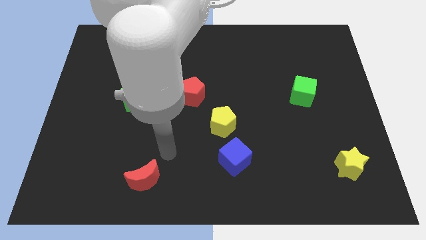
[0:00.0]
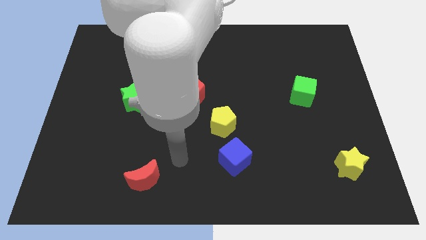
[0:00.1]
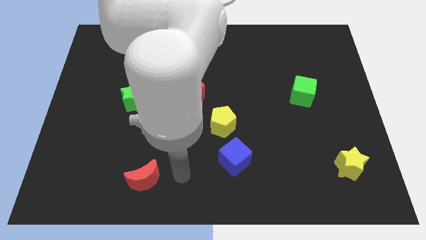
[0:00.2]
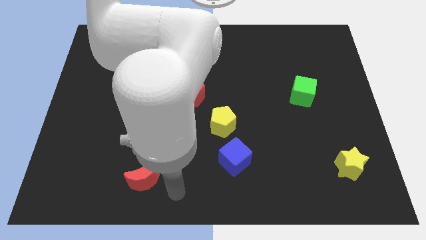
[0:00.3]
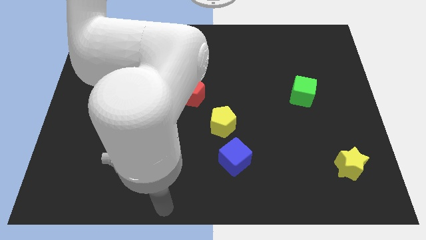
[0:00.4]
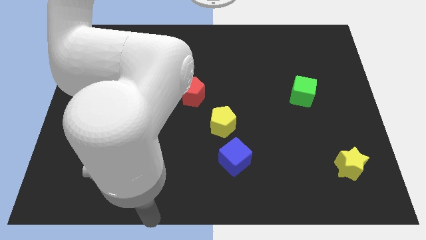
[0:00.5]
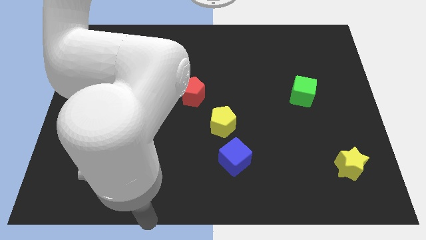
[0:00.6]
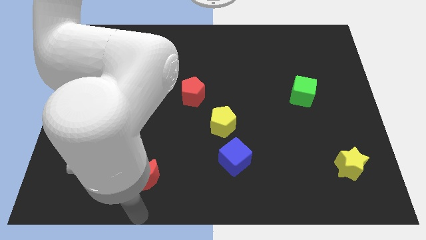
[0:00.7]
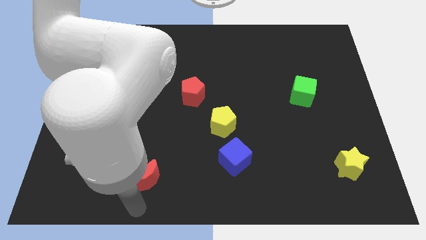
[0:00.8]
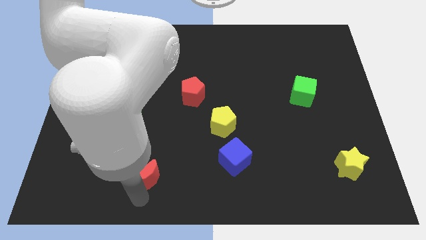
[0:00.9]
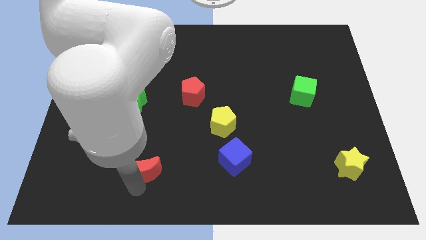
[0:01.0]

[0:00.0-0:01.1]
place your hand below the red moon

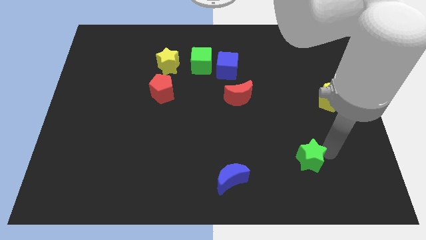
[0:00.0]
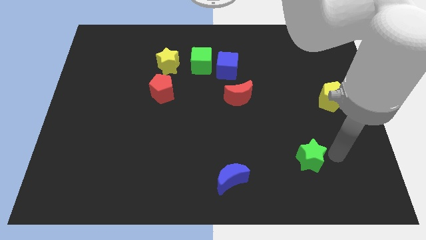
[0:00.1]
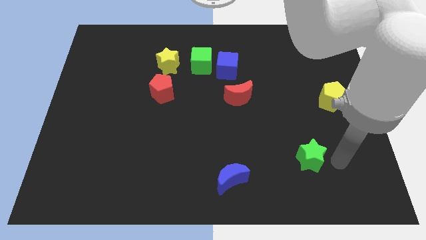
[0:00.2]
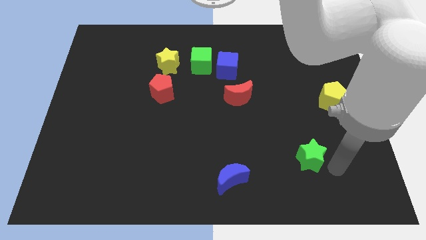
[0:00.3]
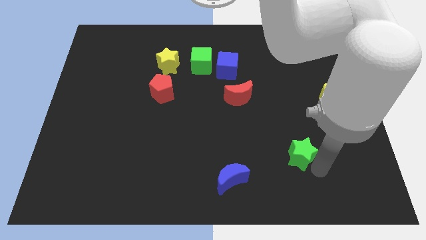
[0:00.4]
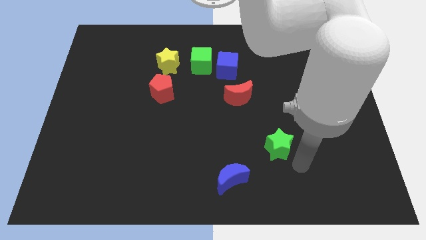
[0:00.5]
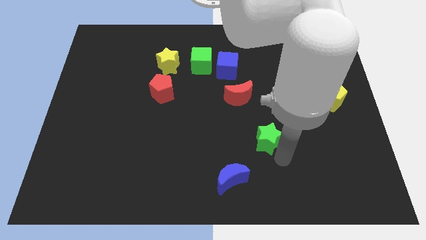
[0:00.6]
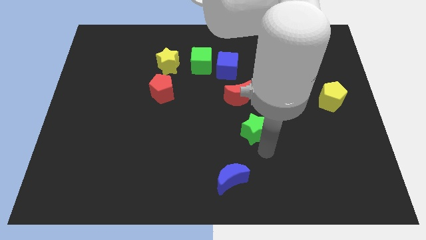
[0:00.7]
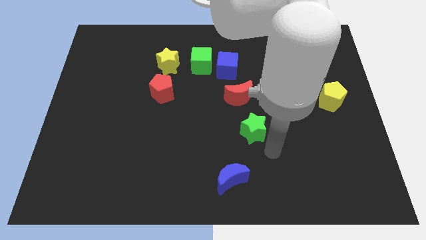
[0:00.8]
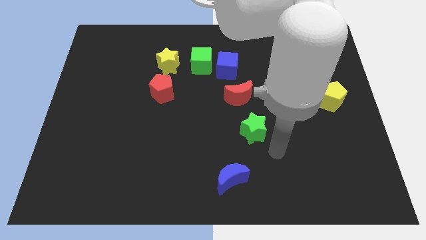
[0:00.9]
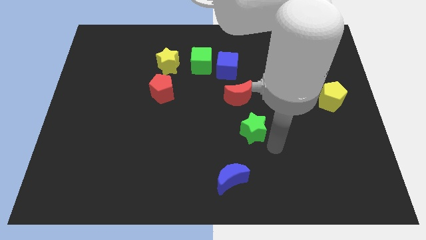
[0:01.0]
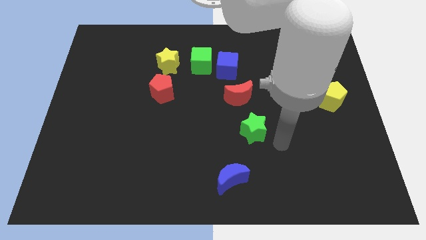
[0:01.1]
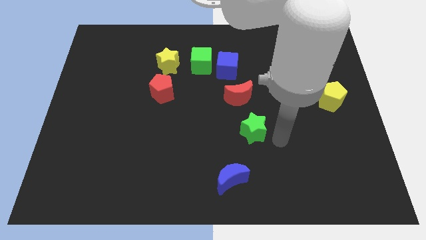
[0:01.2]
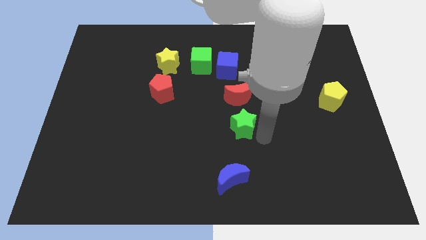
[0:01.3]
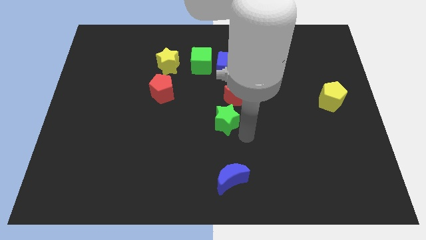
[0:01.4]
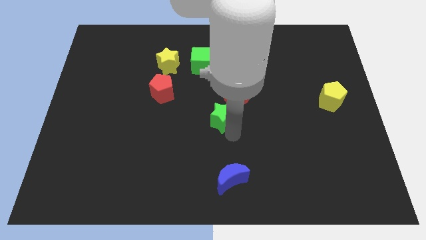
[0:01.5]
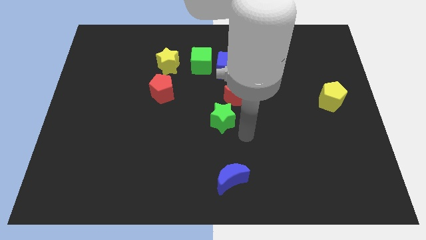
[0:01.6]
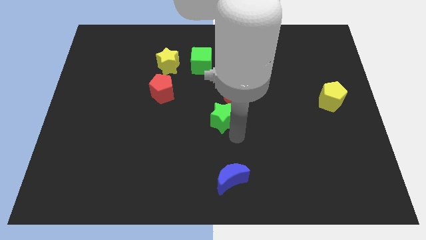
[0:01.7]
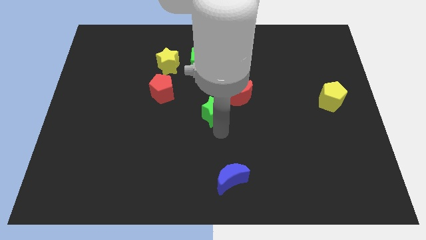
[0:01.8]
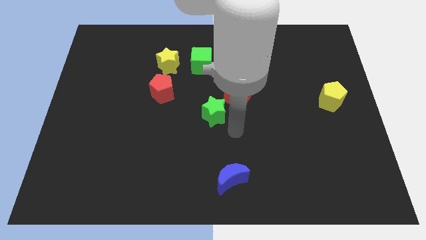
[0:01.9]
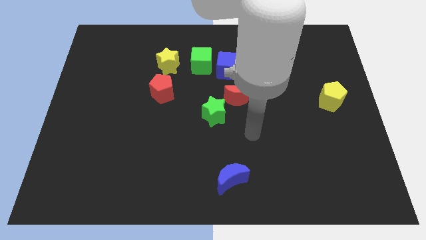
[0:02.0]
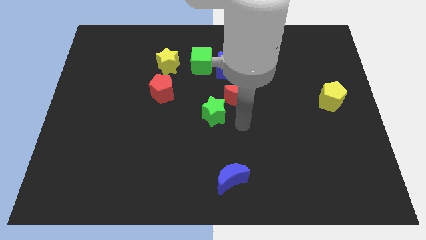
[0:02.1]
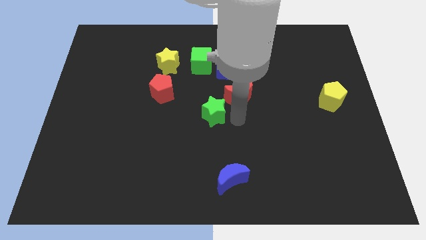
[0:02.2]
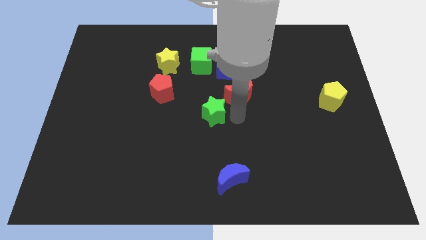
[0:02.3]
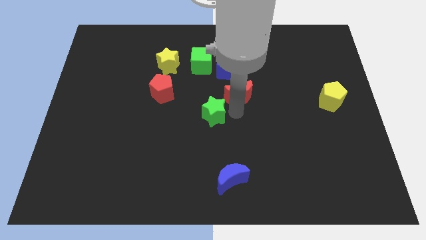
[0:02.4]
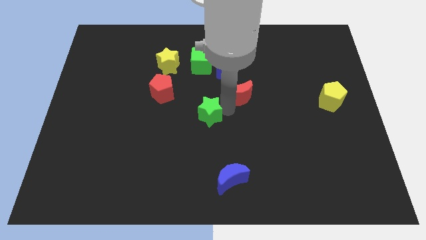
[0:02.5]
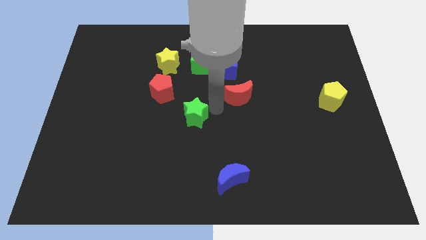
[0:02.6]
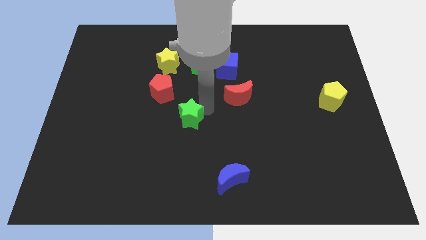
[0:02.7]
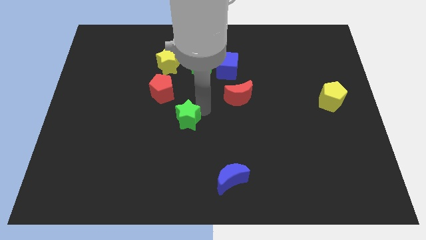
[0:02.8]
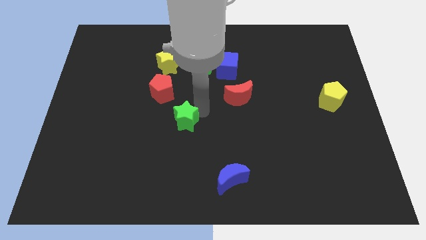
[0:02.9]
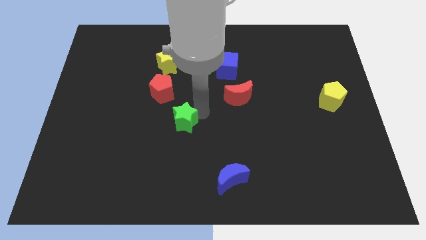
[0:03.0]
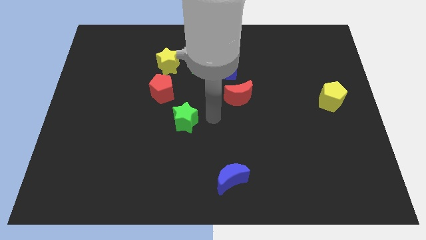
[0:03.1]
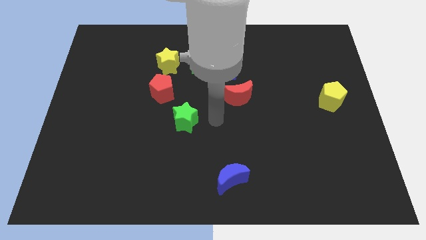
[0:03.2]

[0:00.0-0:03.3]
put the green star in between the red pentagon and blue crescent

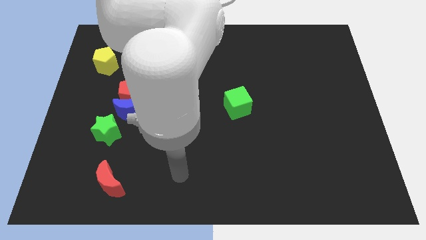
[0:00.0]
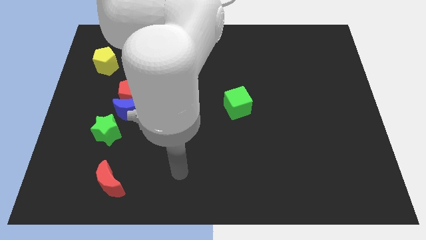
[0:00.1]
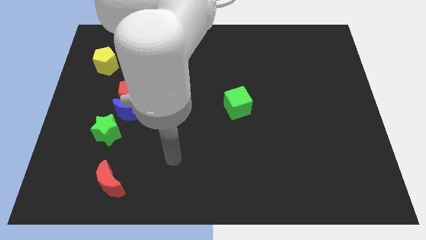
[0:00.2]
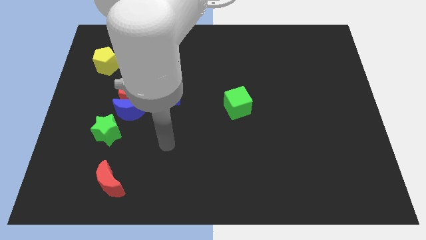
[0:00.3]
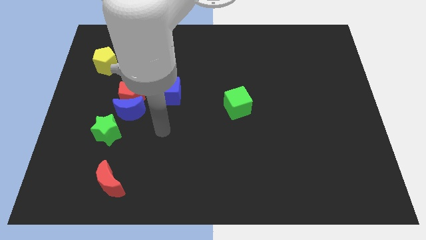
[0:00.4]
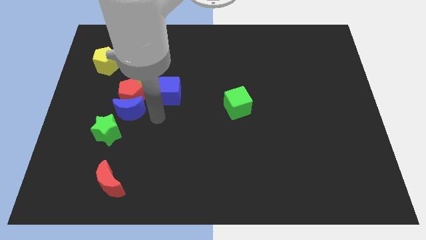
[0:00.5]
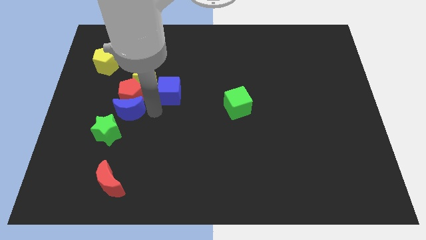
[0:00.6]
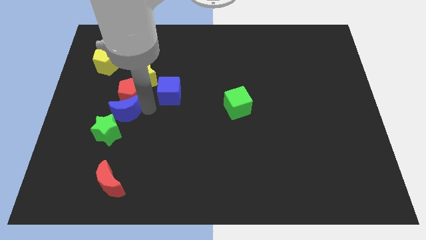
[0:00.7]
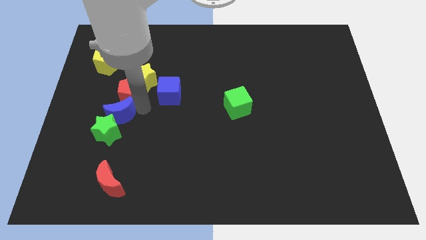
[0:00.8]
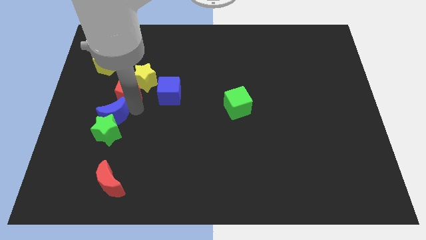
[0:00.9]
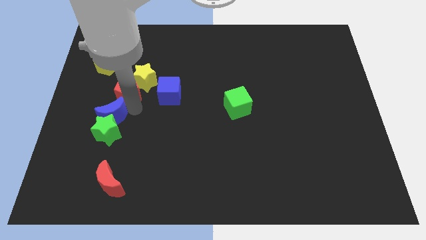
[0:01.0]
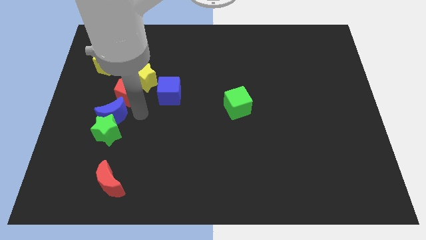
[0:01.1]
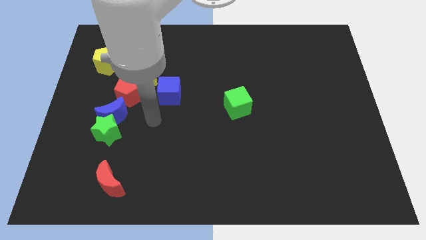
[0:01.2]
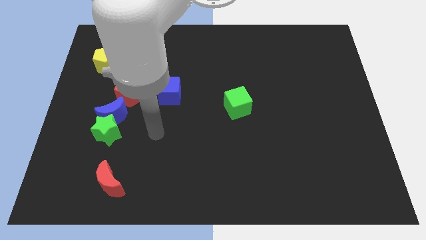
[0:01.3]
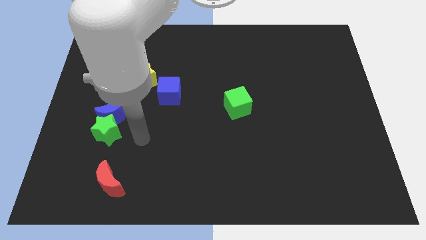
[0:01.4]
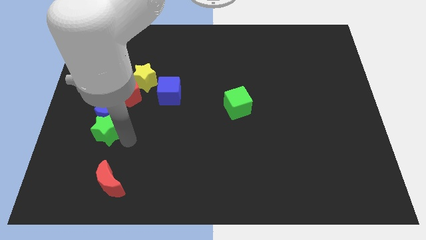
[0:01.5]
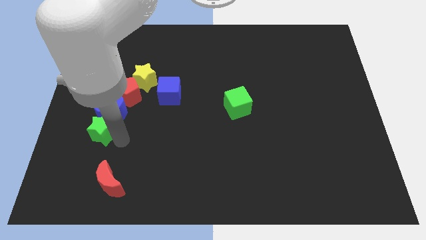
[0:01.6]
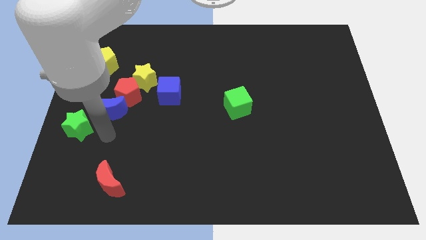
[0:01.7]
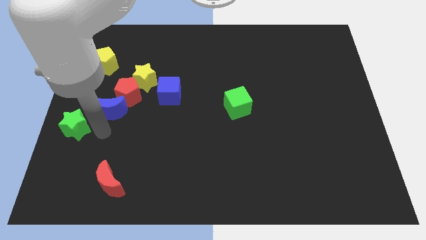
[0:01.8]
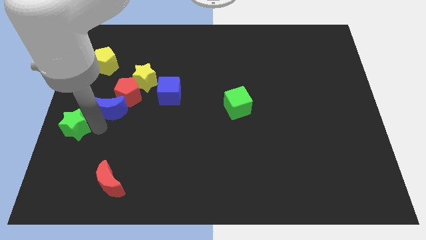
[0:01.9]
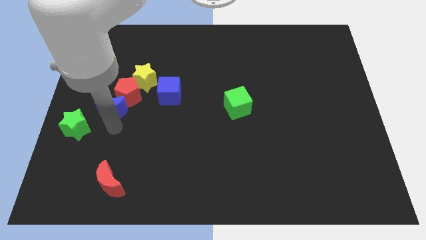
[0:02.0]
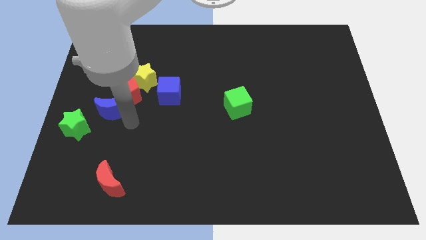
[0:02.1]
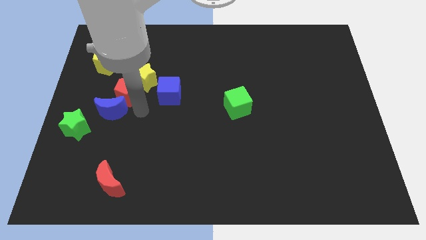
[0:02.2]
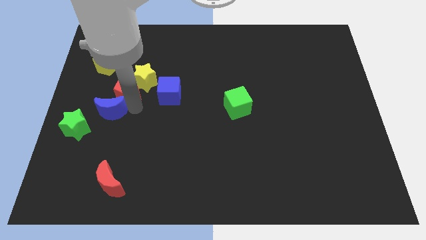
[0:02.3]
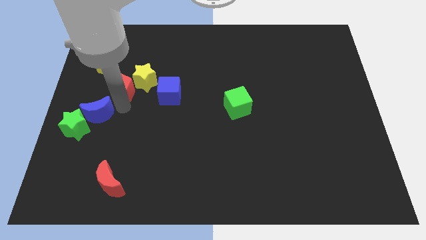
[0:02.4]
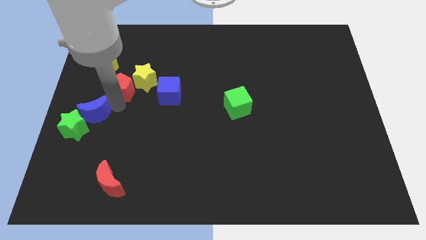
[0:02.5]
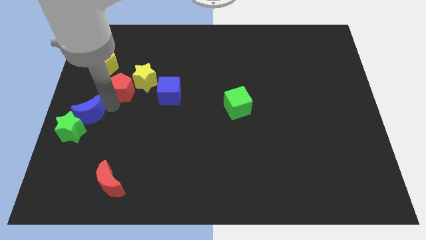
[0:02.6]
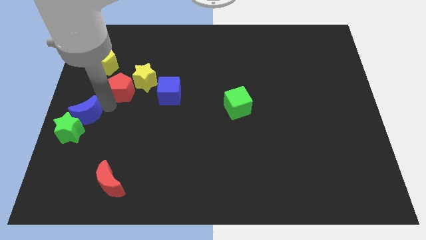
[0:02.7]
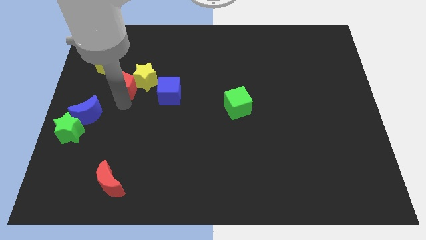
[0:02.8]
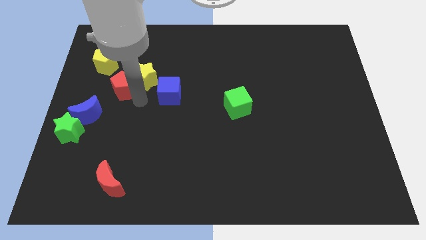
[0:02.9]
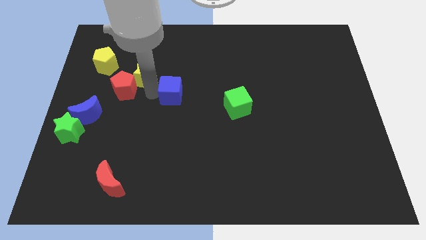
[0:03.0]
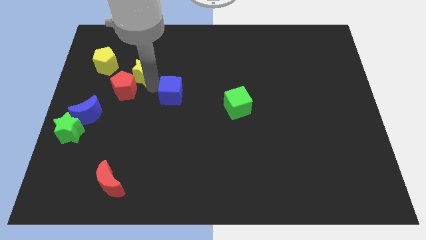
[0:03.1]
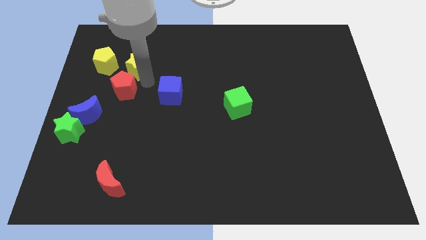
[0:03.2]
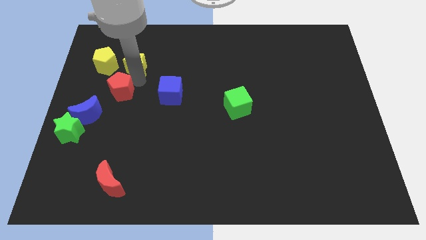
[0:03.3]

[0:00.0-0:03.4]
move green star to the left

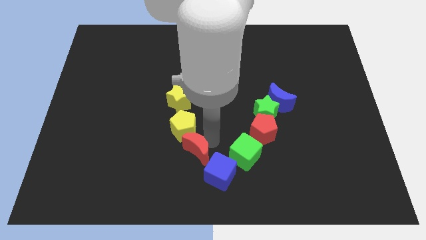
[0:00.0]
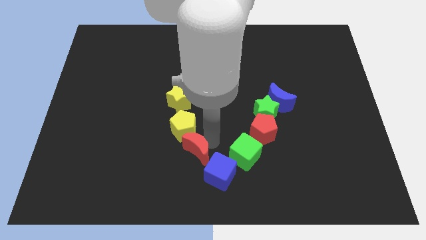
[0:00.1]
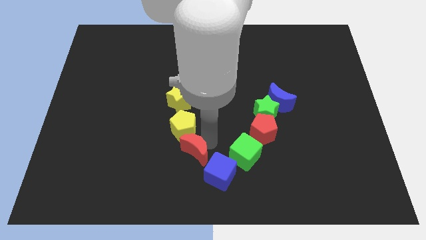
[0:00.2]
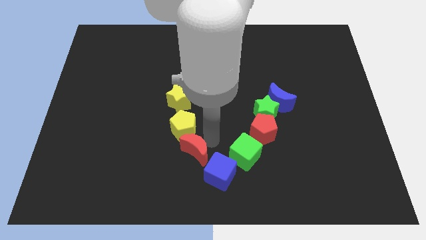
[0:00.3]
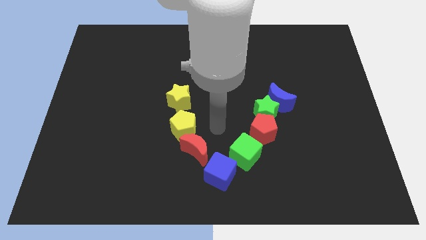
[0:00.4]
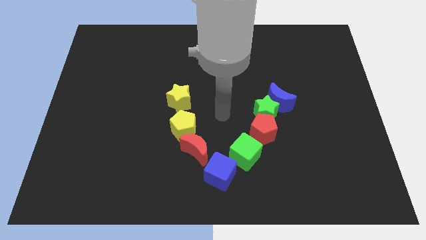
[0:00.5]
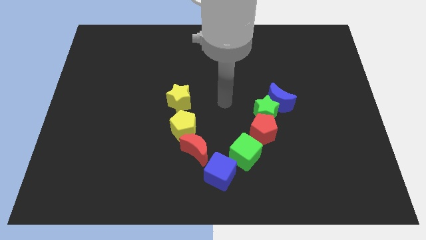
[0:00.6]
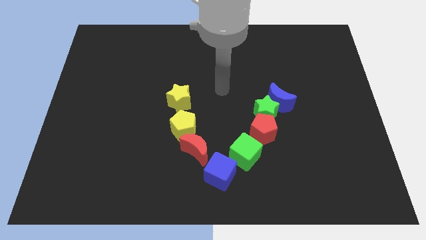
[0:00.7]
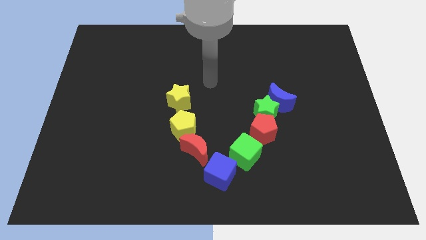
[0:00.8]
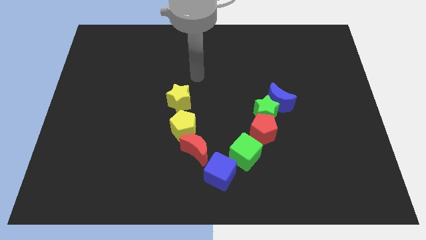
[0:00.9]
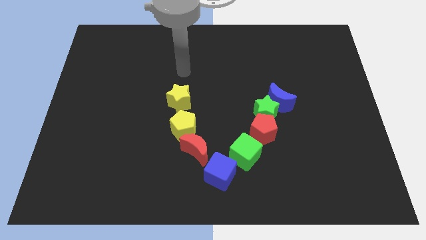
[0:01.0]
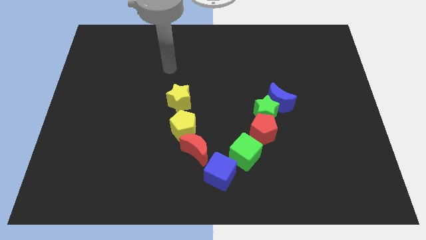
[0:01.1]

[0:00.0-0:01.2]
move the arm away from the red moon
